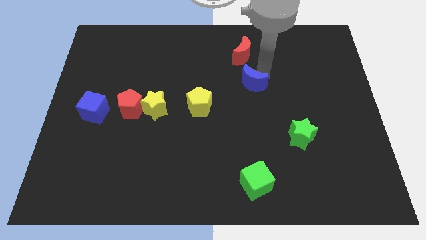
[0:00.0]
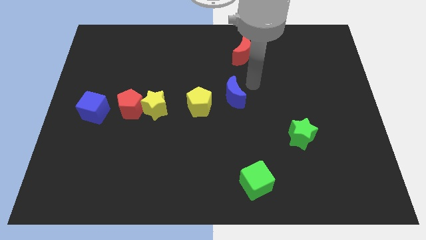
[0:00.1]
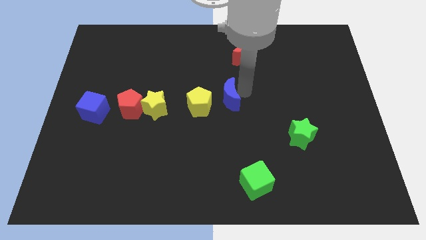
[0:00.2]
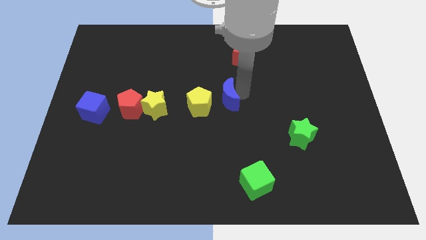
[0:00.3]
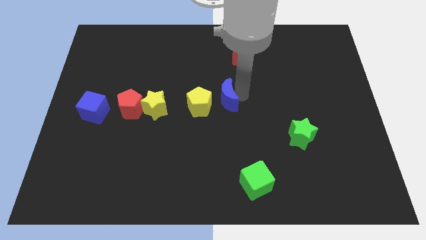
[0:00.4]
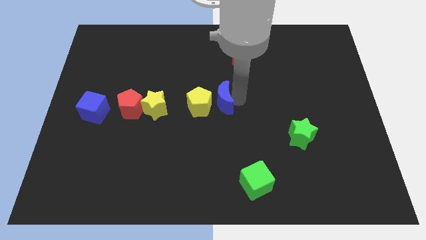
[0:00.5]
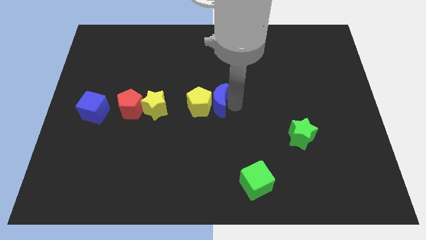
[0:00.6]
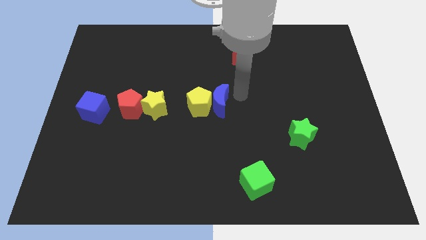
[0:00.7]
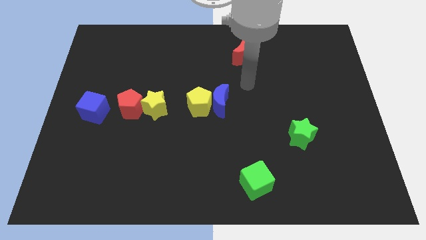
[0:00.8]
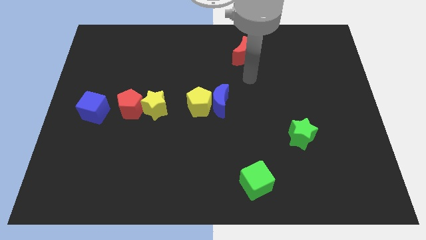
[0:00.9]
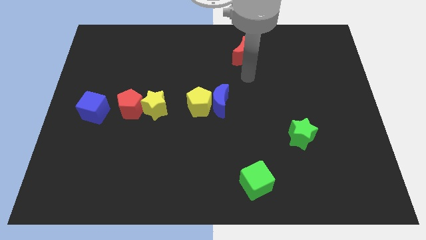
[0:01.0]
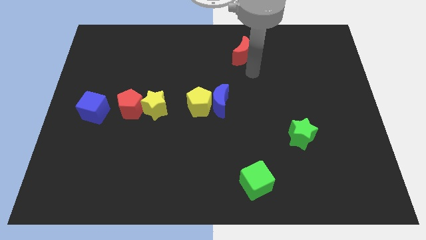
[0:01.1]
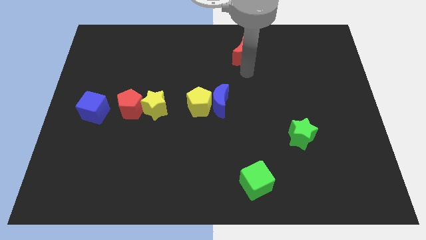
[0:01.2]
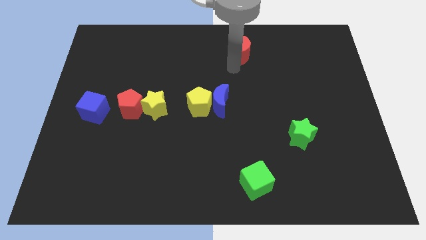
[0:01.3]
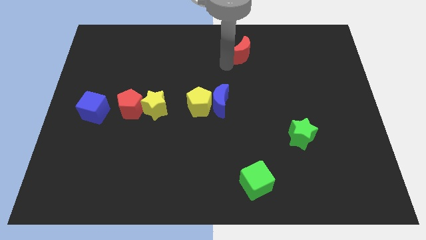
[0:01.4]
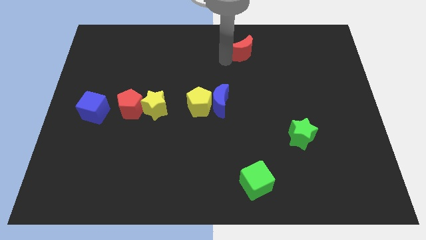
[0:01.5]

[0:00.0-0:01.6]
place the blue moon to the right of the yellow pentagon

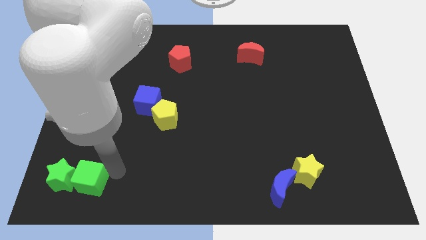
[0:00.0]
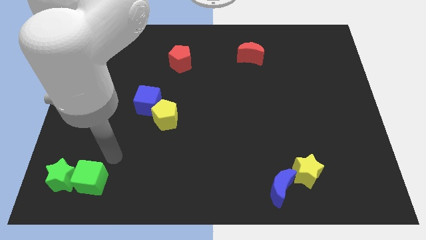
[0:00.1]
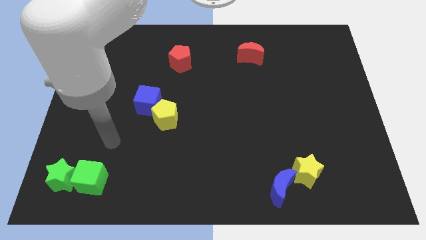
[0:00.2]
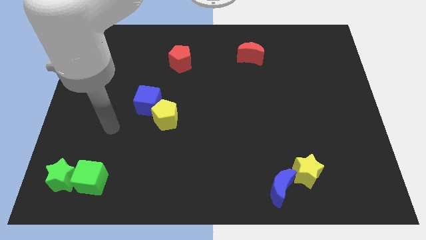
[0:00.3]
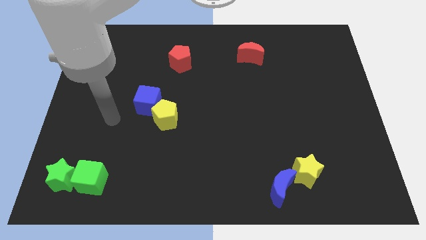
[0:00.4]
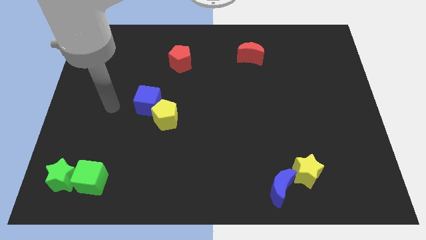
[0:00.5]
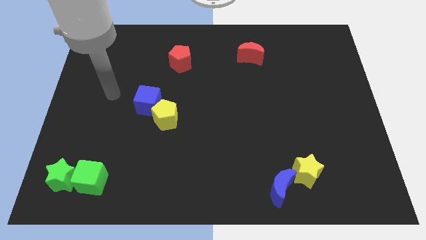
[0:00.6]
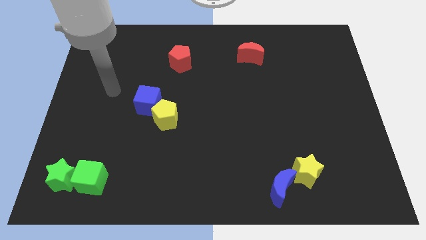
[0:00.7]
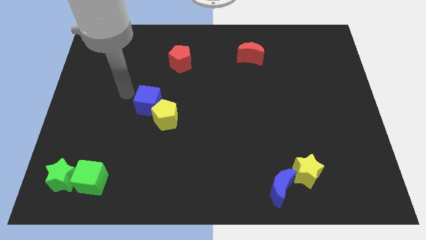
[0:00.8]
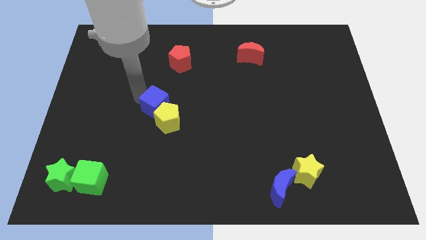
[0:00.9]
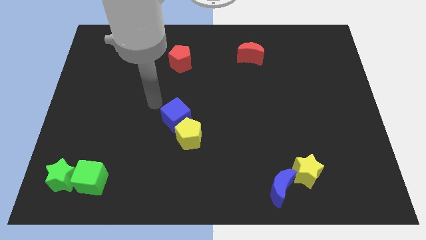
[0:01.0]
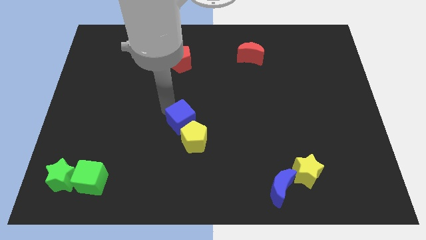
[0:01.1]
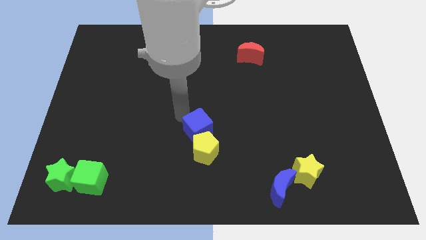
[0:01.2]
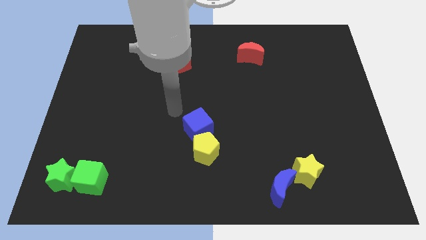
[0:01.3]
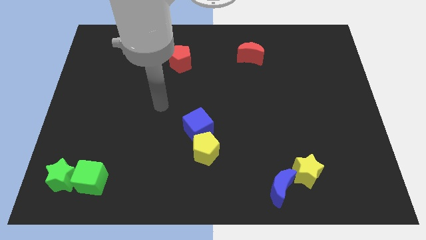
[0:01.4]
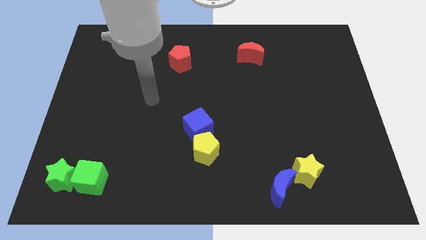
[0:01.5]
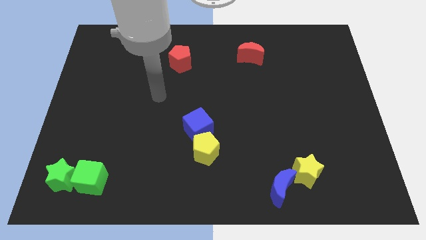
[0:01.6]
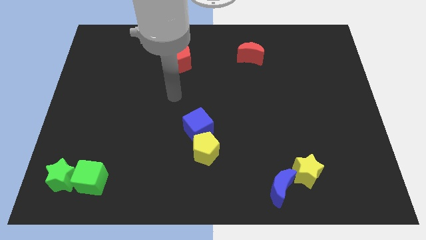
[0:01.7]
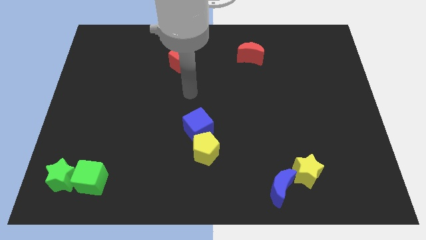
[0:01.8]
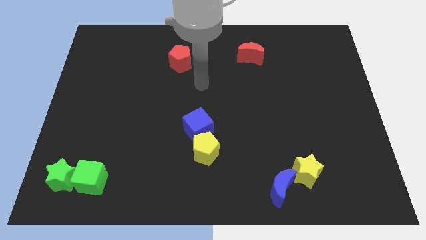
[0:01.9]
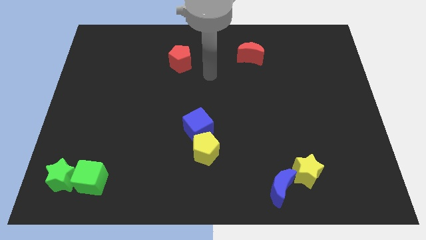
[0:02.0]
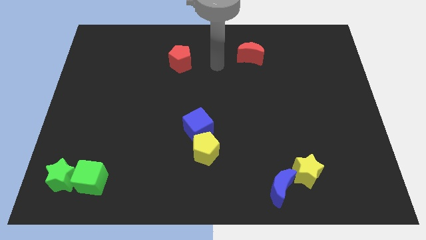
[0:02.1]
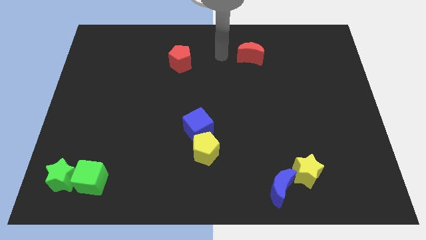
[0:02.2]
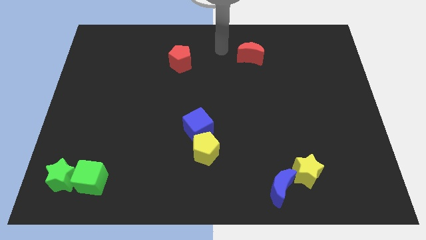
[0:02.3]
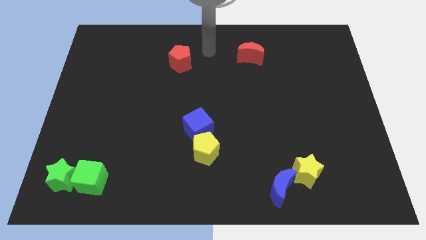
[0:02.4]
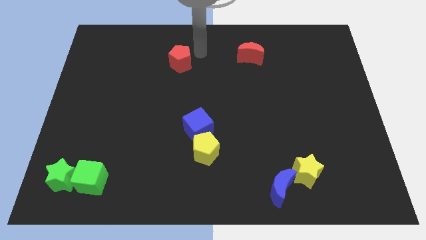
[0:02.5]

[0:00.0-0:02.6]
push the yellow pentagon slightly with the blue cube

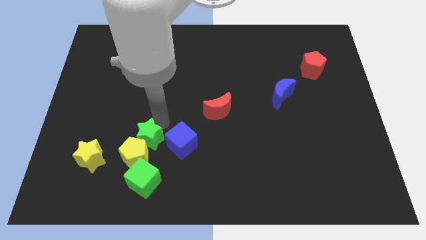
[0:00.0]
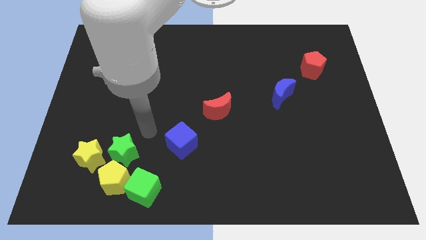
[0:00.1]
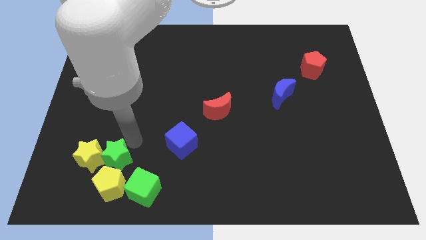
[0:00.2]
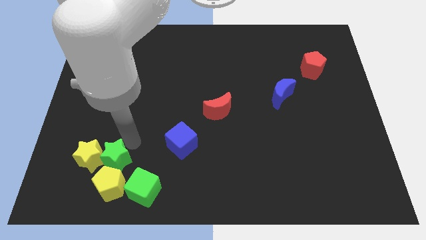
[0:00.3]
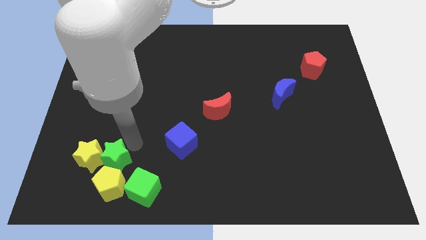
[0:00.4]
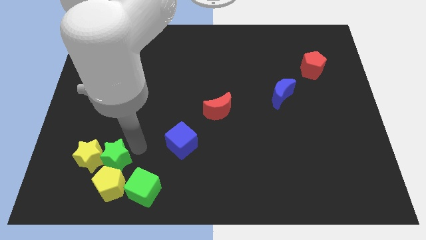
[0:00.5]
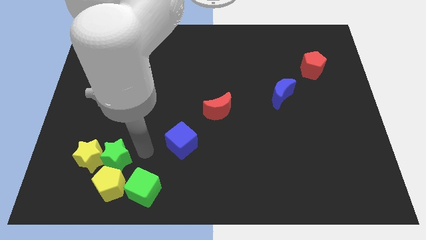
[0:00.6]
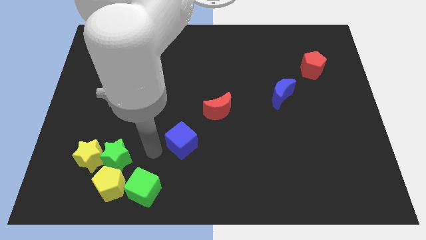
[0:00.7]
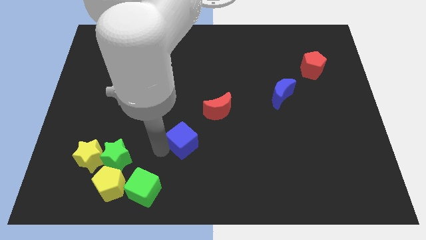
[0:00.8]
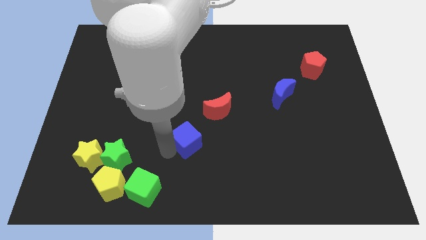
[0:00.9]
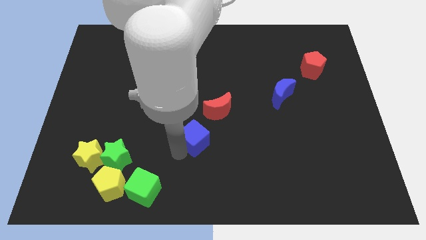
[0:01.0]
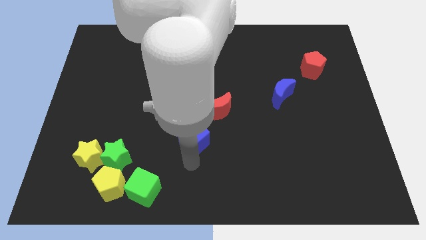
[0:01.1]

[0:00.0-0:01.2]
move the blue cube towards the red moon

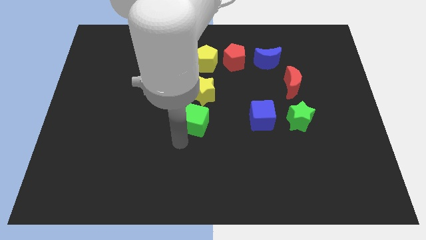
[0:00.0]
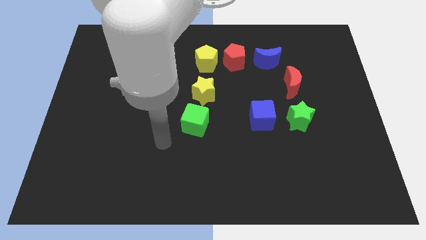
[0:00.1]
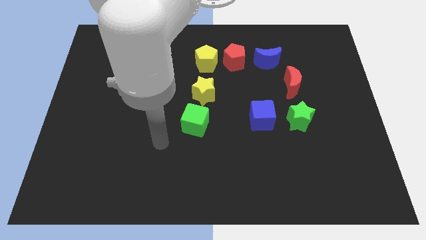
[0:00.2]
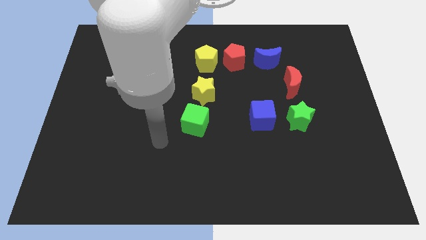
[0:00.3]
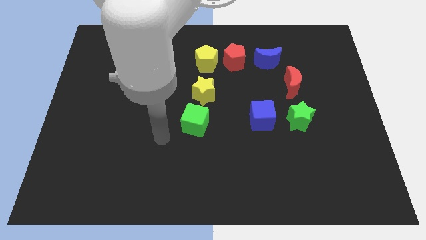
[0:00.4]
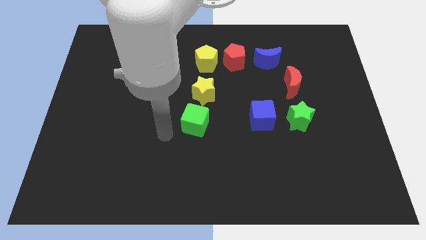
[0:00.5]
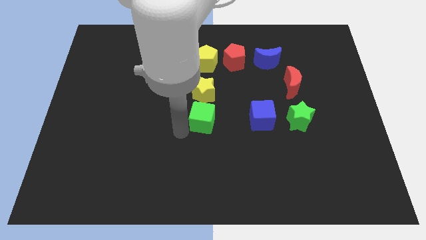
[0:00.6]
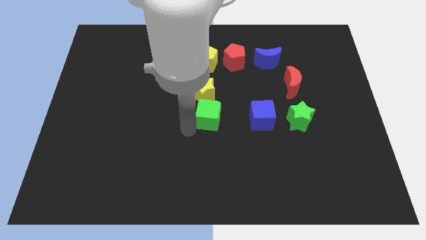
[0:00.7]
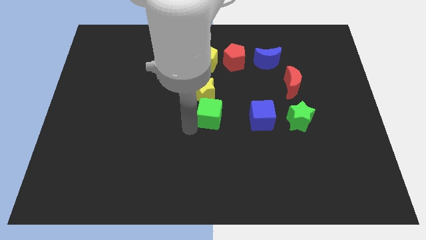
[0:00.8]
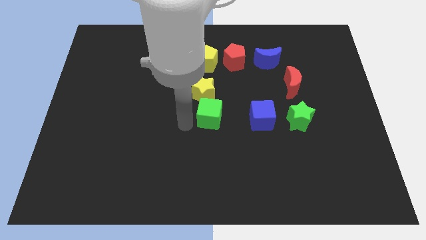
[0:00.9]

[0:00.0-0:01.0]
move green cube below the yellow star

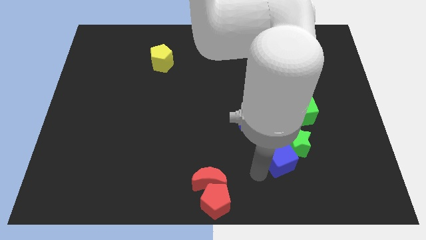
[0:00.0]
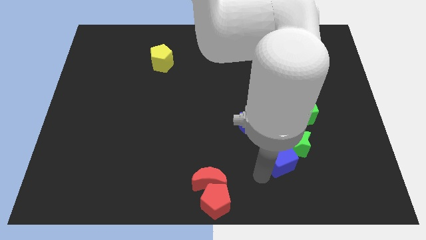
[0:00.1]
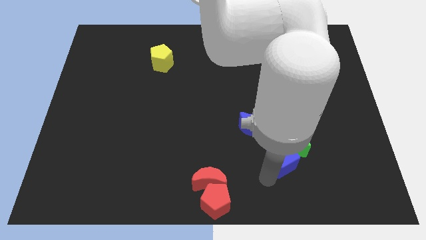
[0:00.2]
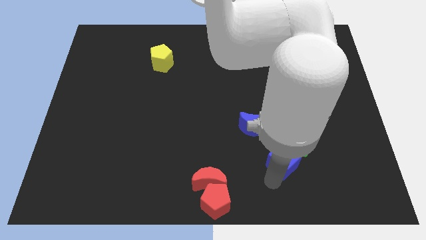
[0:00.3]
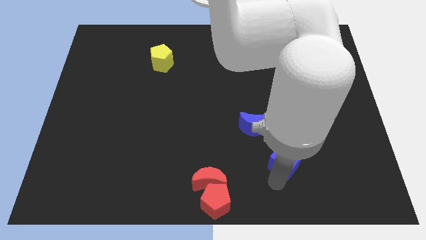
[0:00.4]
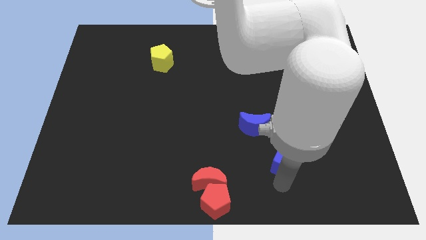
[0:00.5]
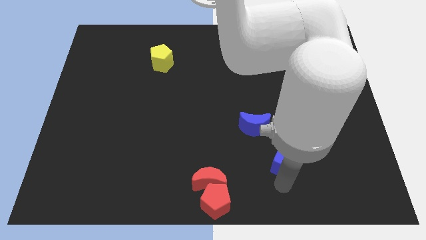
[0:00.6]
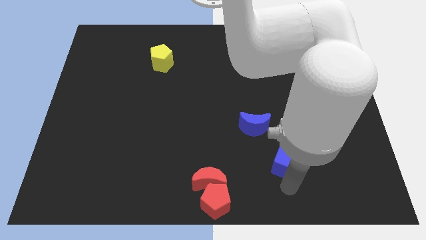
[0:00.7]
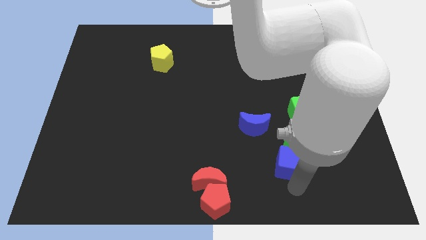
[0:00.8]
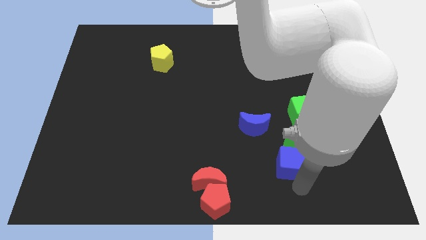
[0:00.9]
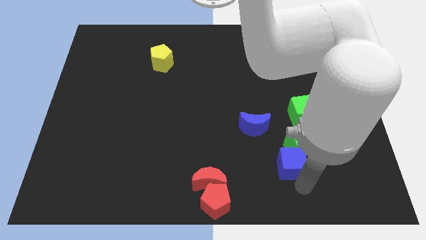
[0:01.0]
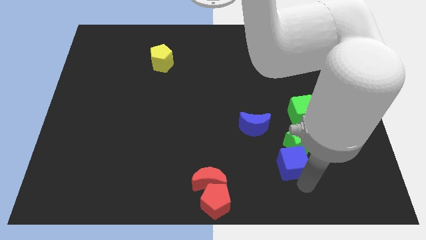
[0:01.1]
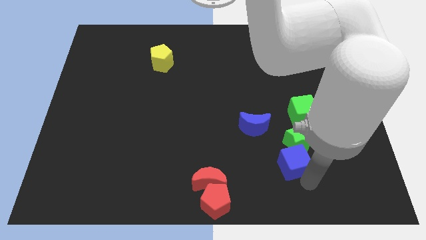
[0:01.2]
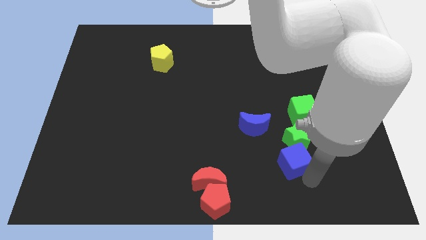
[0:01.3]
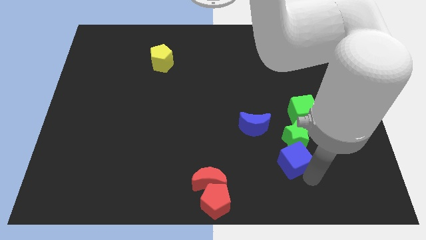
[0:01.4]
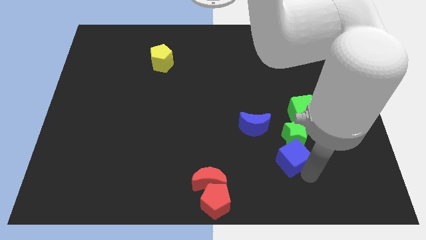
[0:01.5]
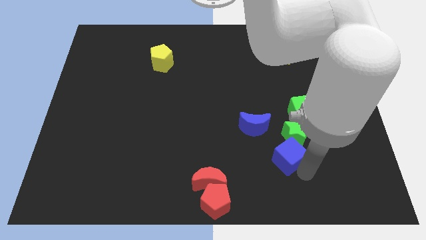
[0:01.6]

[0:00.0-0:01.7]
move the blue cube into the green star

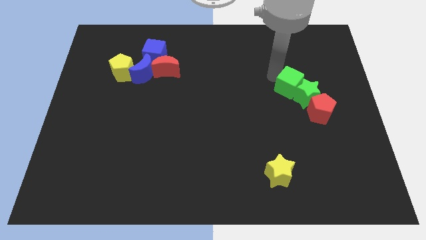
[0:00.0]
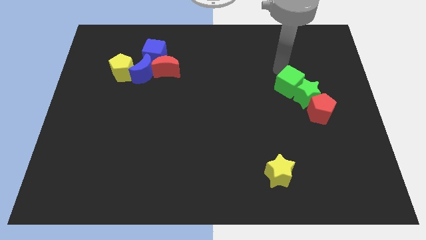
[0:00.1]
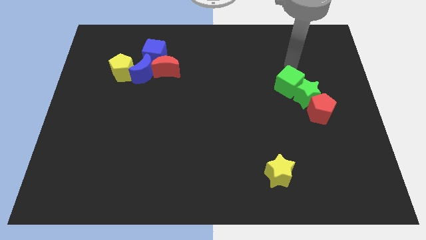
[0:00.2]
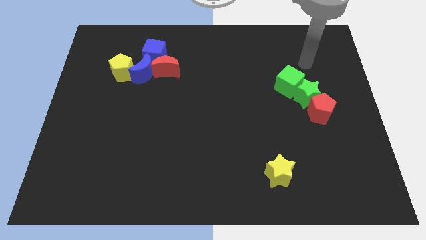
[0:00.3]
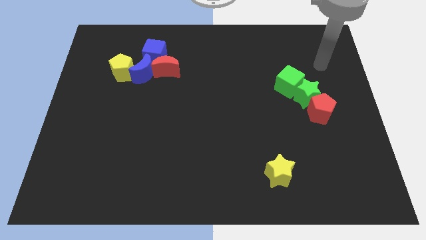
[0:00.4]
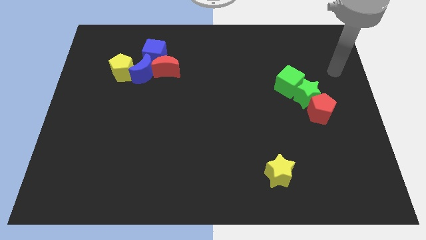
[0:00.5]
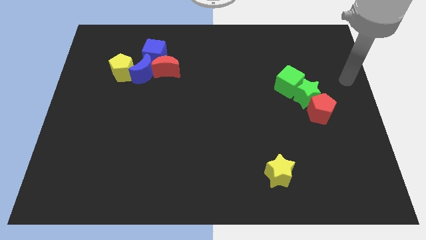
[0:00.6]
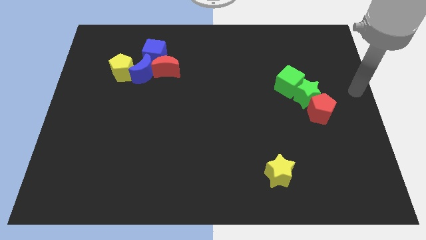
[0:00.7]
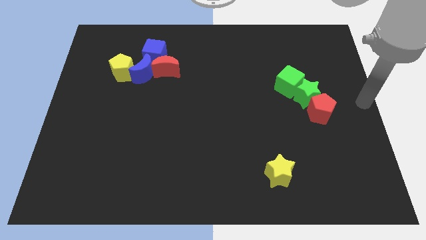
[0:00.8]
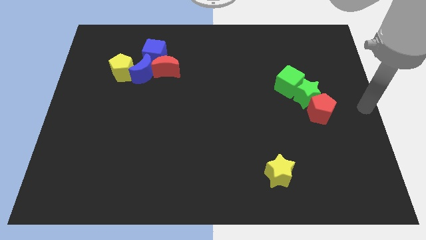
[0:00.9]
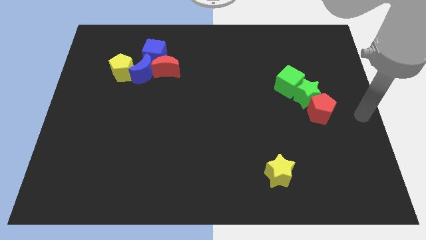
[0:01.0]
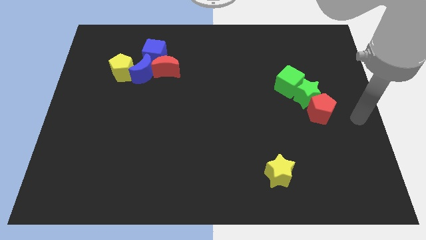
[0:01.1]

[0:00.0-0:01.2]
move the arm away from the green cube
